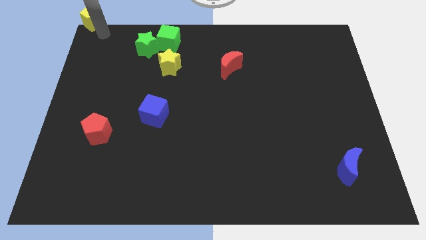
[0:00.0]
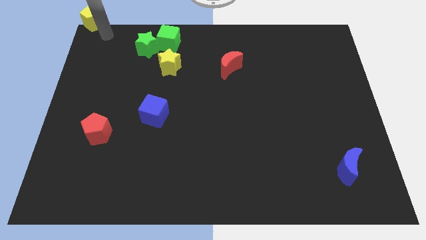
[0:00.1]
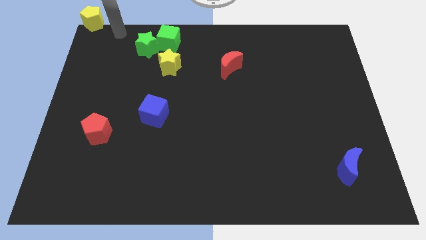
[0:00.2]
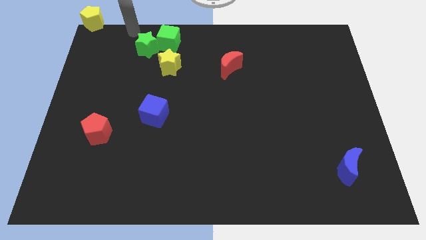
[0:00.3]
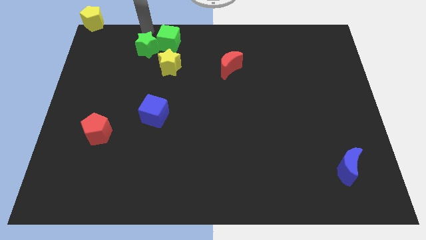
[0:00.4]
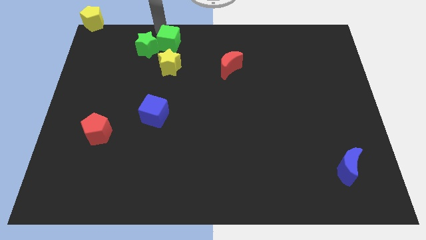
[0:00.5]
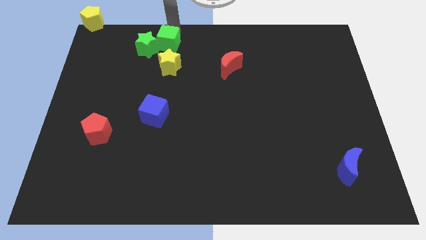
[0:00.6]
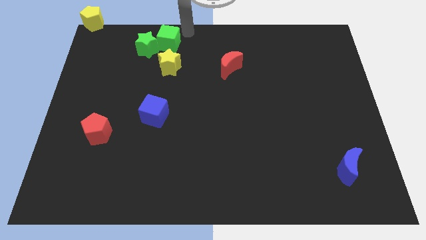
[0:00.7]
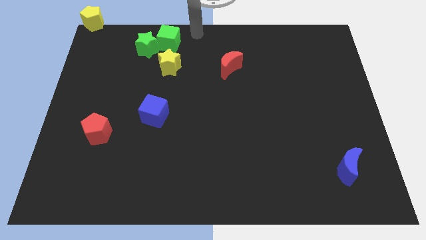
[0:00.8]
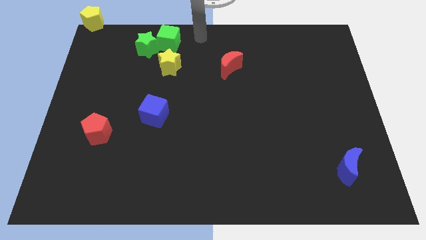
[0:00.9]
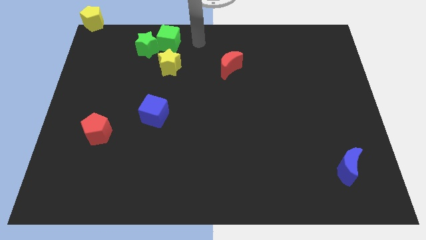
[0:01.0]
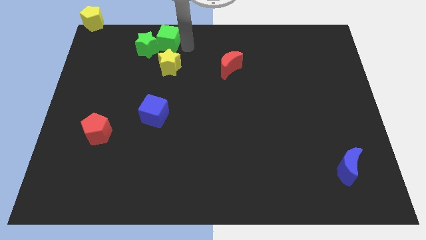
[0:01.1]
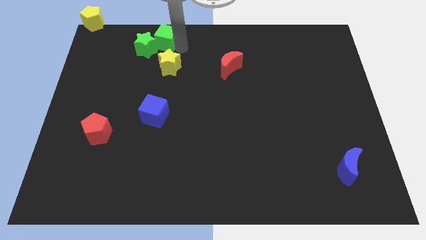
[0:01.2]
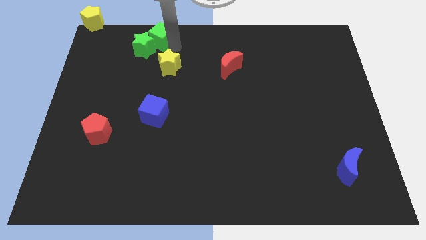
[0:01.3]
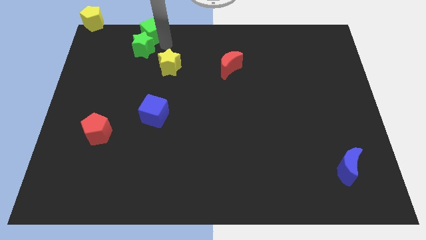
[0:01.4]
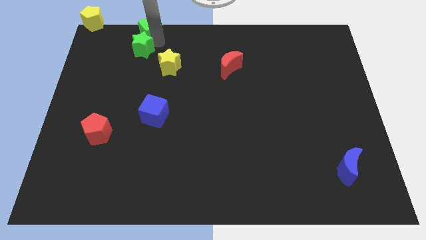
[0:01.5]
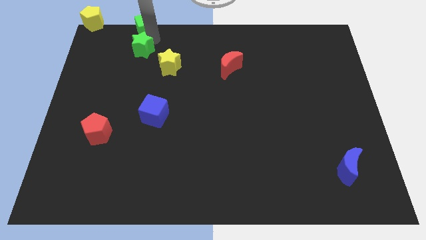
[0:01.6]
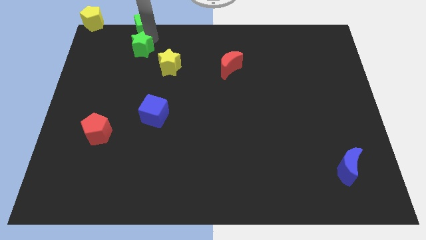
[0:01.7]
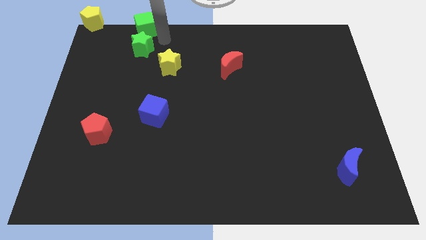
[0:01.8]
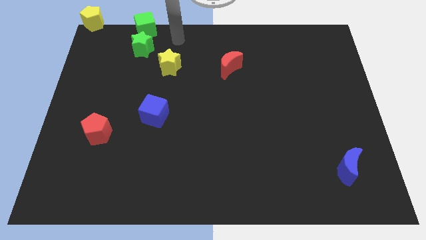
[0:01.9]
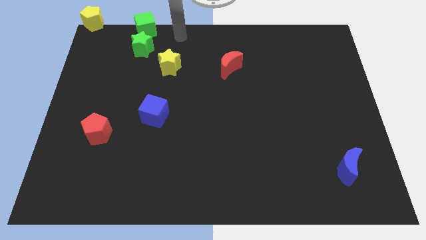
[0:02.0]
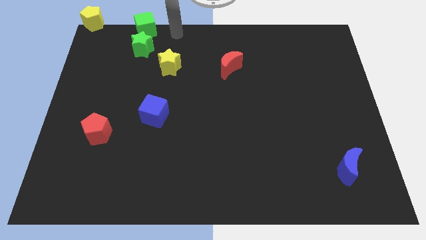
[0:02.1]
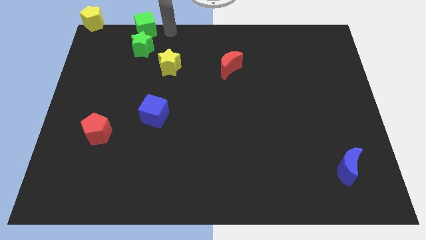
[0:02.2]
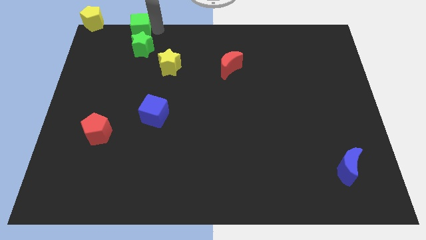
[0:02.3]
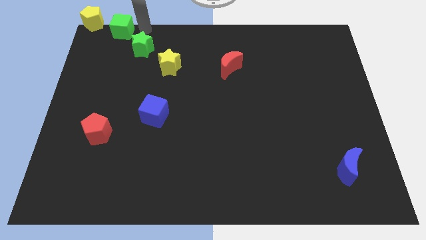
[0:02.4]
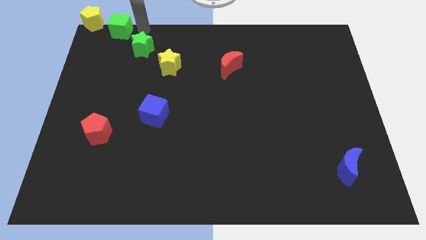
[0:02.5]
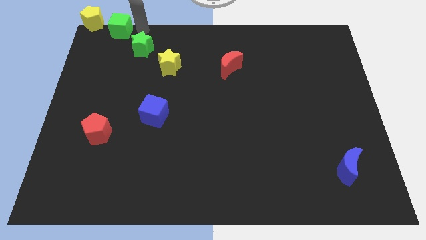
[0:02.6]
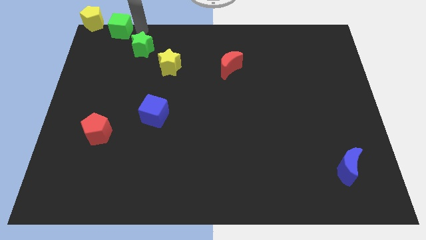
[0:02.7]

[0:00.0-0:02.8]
push the green cube to the right of the yellow pentagon

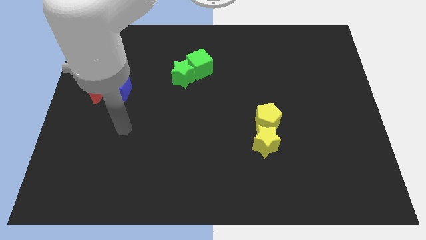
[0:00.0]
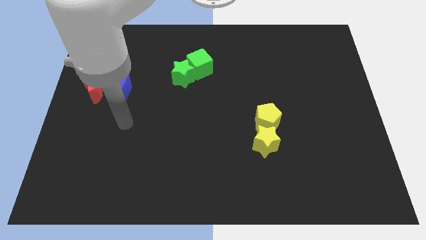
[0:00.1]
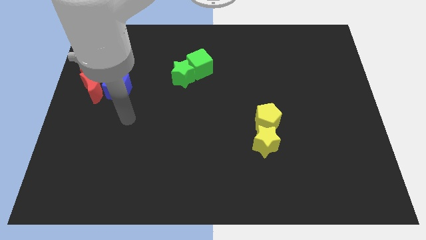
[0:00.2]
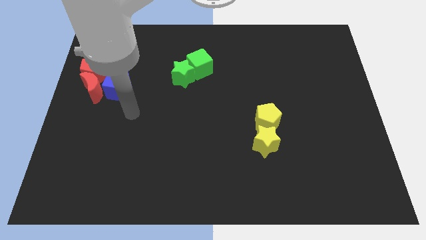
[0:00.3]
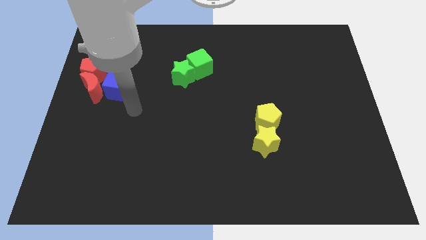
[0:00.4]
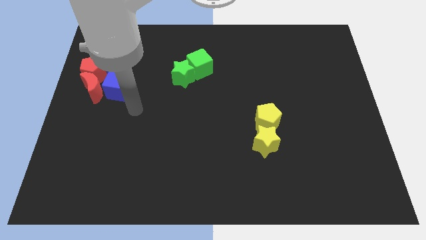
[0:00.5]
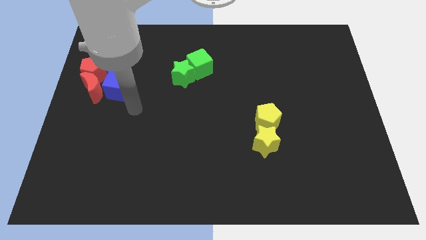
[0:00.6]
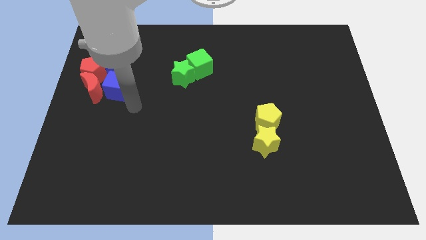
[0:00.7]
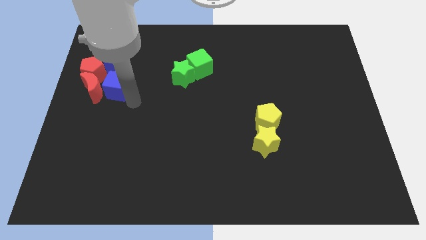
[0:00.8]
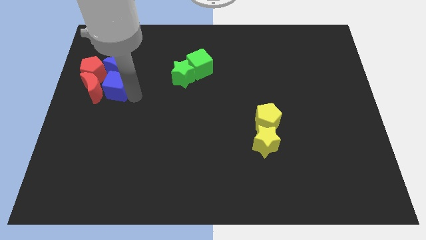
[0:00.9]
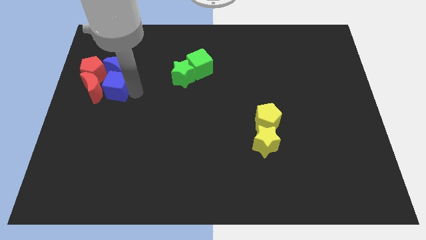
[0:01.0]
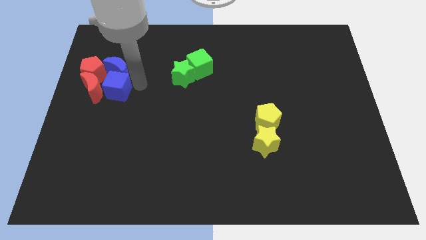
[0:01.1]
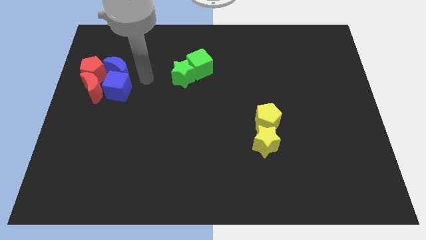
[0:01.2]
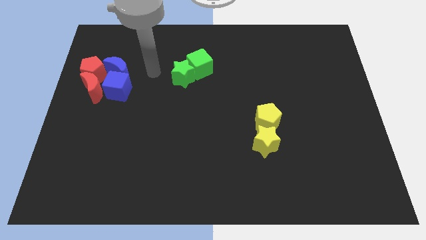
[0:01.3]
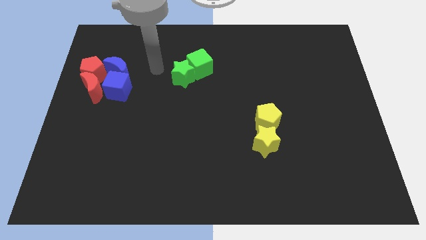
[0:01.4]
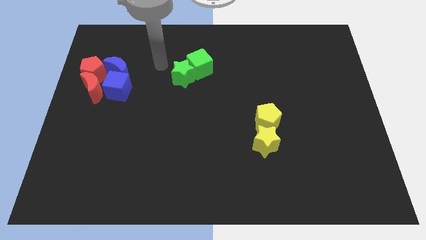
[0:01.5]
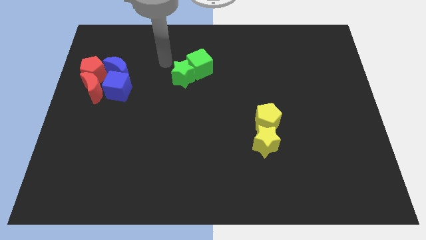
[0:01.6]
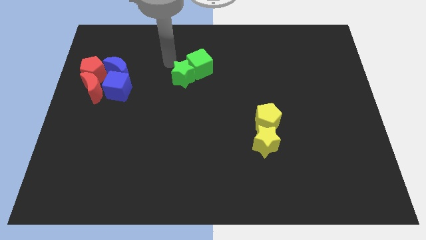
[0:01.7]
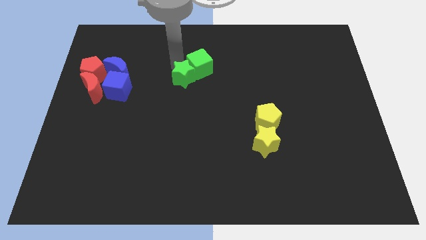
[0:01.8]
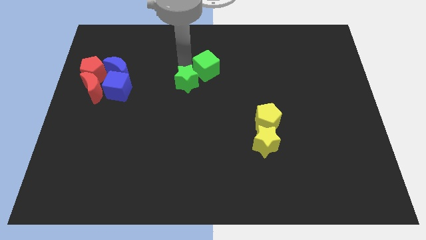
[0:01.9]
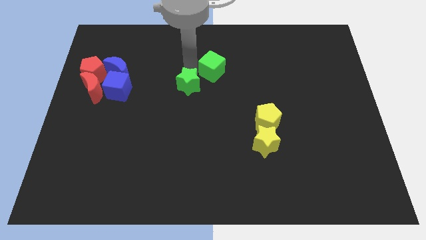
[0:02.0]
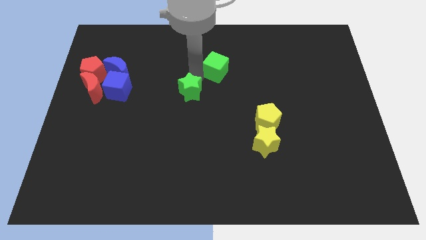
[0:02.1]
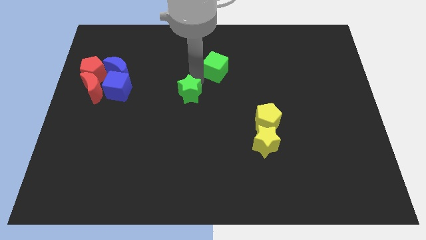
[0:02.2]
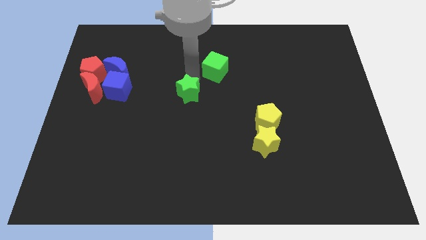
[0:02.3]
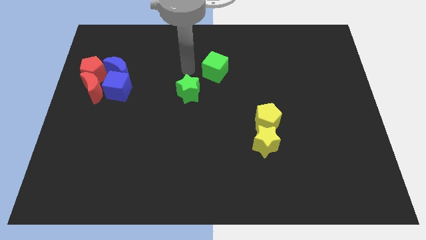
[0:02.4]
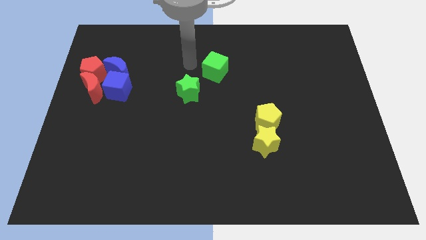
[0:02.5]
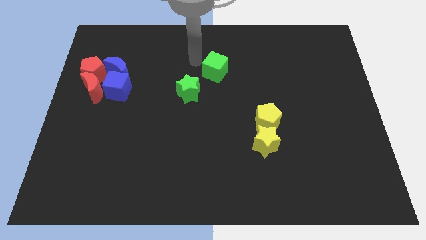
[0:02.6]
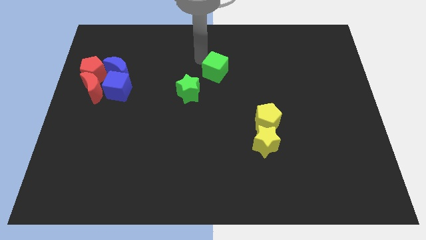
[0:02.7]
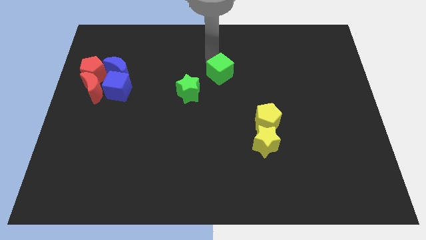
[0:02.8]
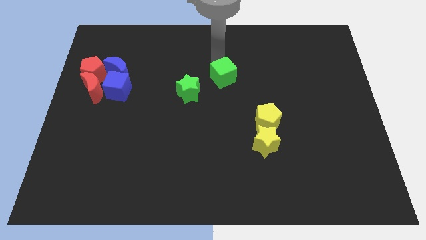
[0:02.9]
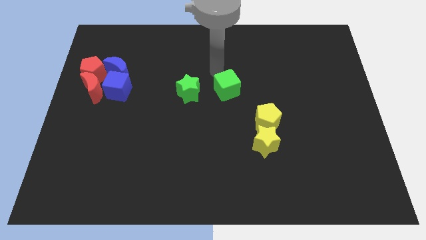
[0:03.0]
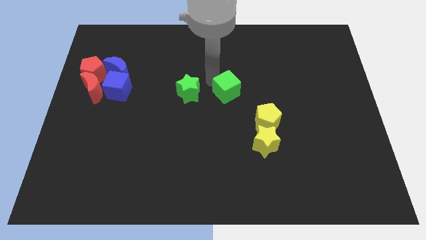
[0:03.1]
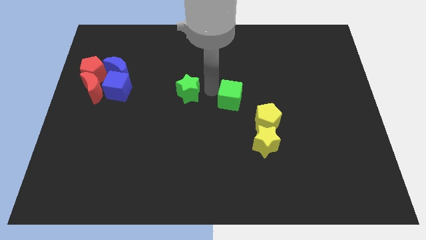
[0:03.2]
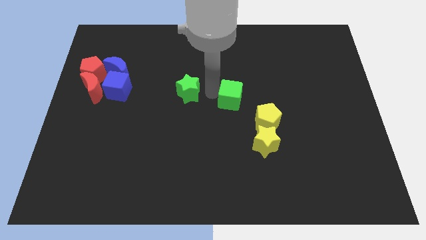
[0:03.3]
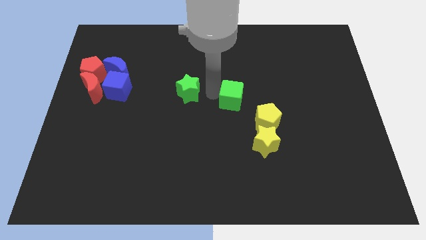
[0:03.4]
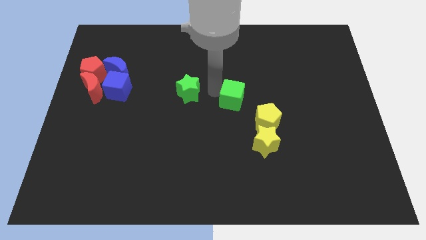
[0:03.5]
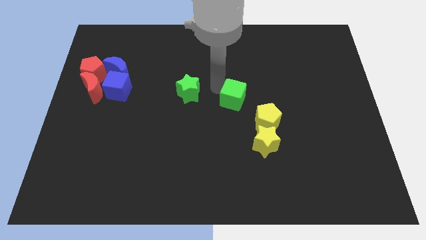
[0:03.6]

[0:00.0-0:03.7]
separate the green cube from the green star

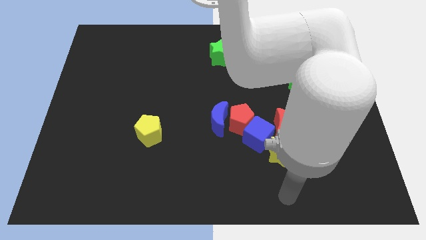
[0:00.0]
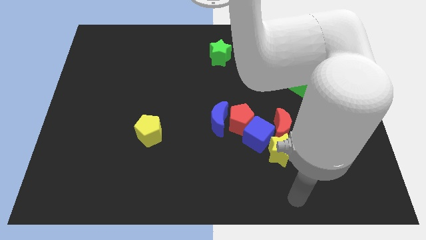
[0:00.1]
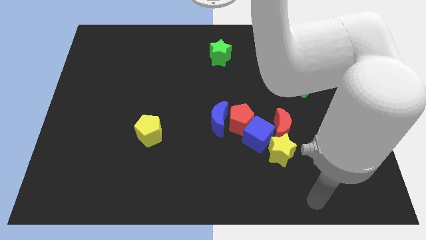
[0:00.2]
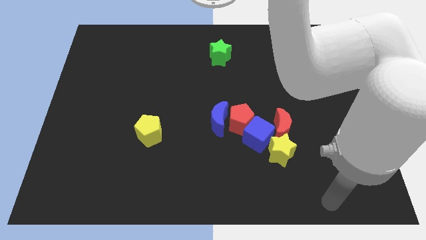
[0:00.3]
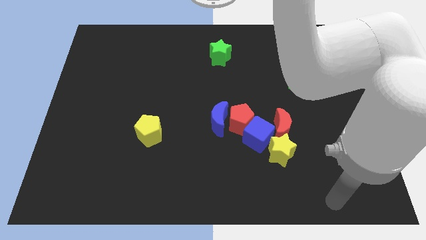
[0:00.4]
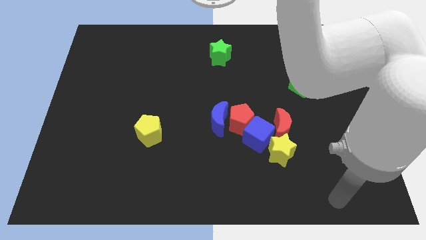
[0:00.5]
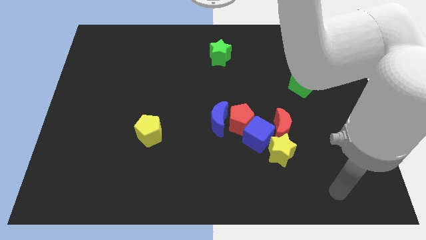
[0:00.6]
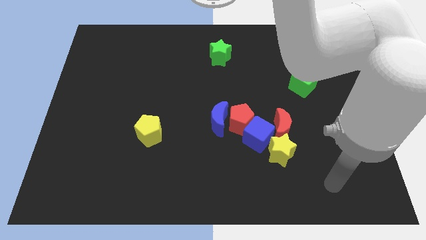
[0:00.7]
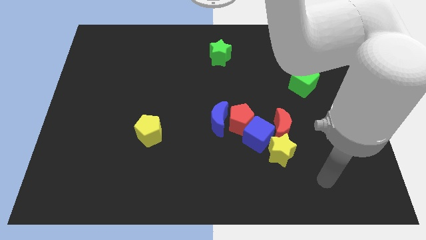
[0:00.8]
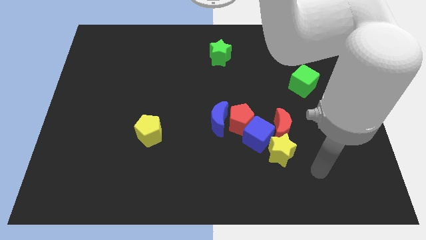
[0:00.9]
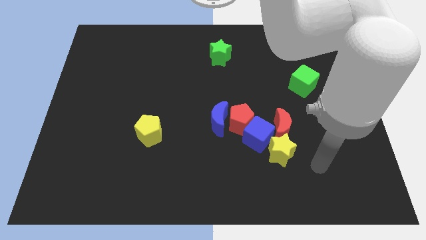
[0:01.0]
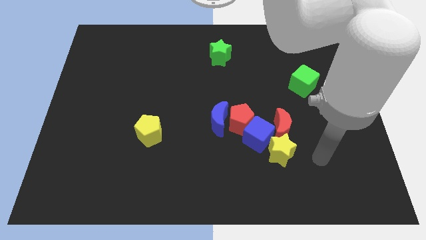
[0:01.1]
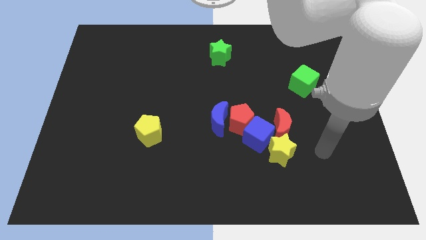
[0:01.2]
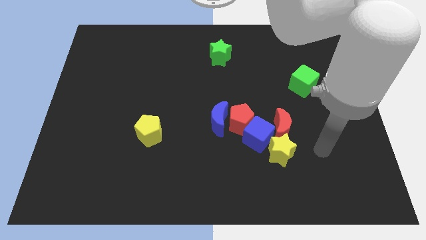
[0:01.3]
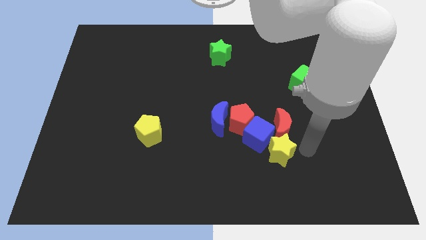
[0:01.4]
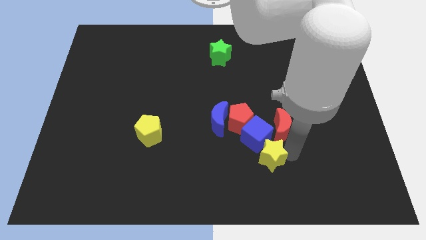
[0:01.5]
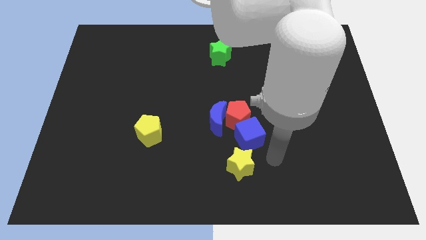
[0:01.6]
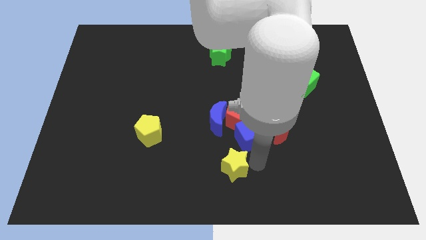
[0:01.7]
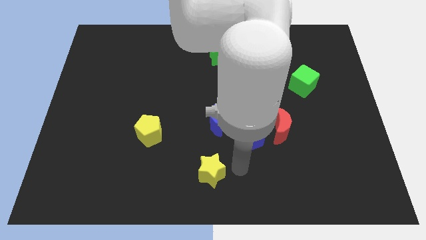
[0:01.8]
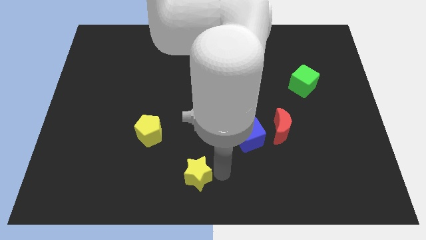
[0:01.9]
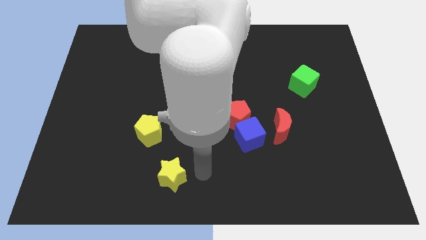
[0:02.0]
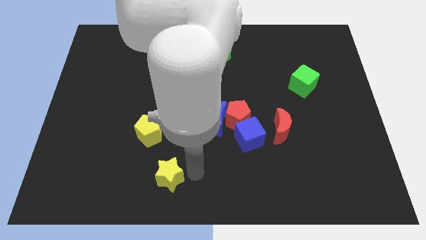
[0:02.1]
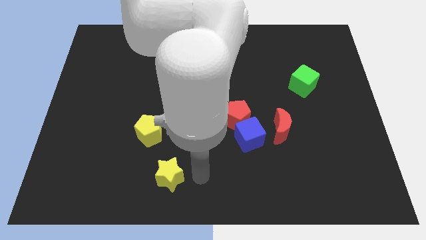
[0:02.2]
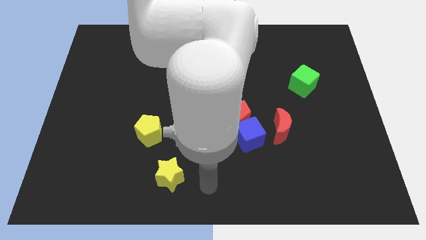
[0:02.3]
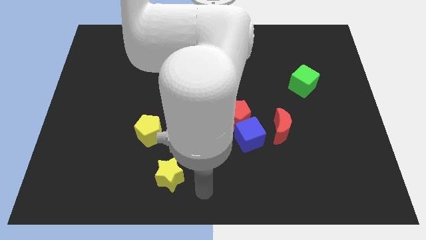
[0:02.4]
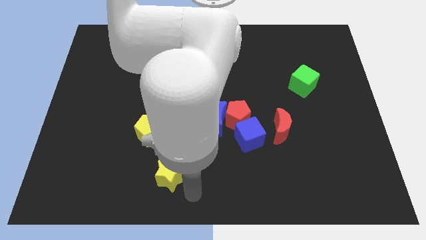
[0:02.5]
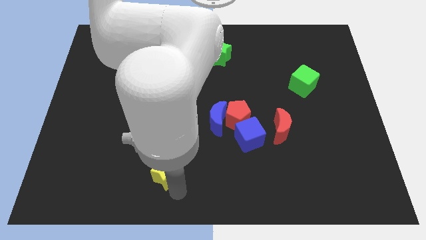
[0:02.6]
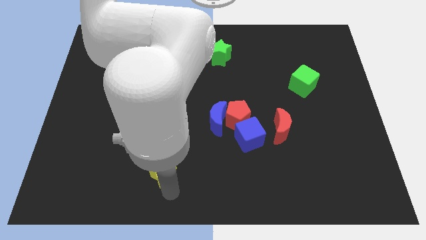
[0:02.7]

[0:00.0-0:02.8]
move yellow star towards yellow pentagon
